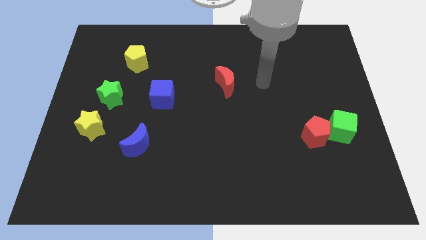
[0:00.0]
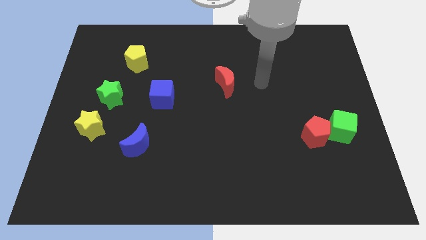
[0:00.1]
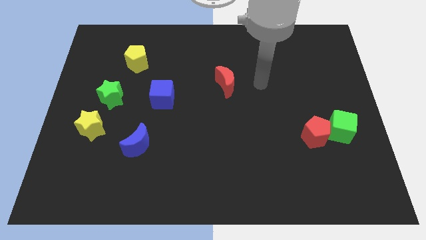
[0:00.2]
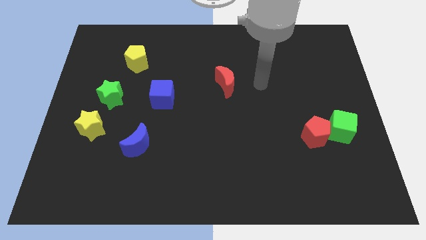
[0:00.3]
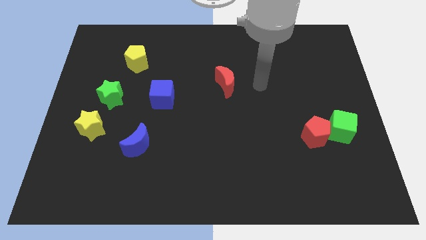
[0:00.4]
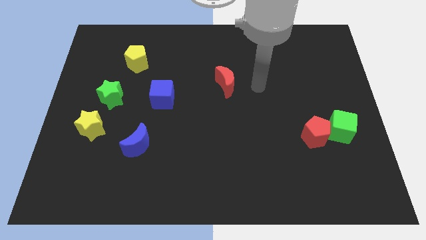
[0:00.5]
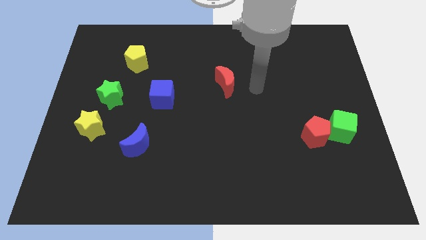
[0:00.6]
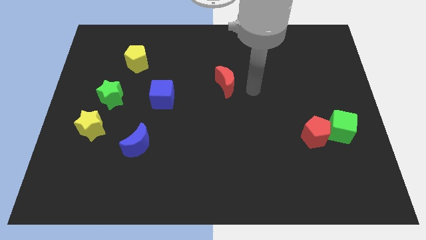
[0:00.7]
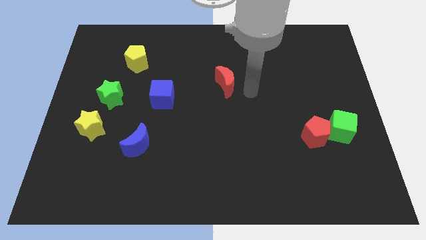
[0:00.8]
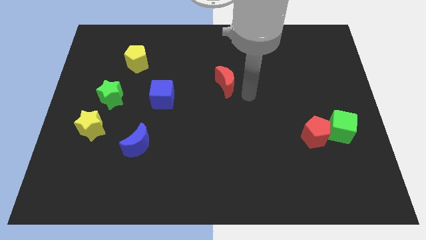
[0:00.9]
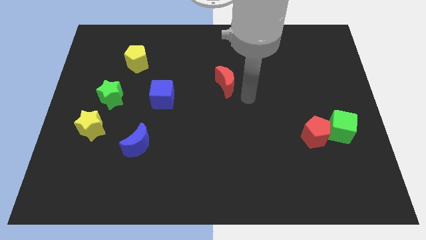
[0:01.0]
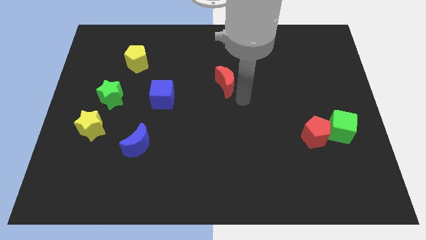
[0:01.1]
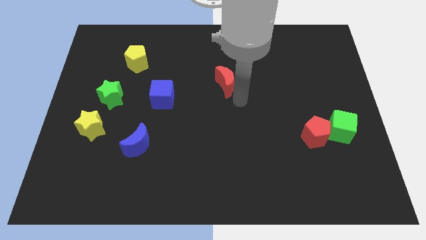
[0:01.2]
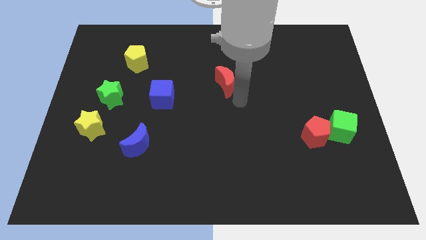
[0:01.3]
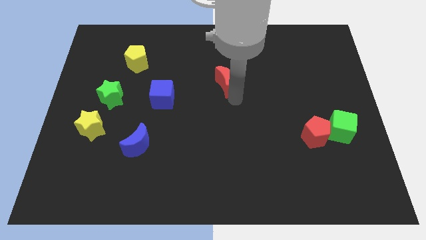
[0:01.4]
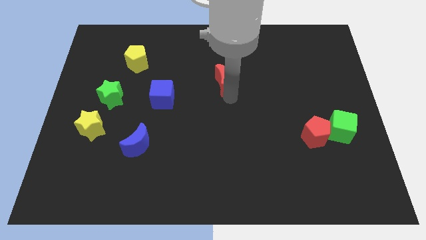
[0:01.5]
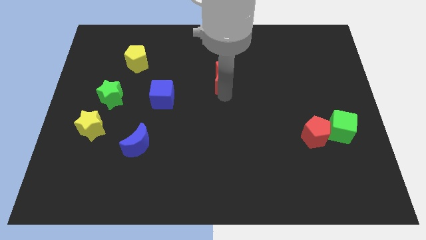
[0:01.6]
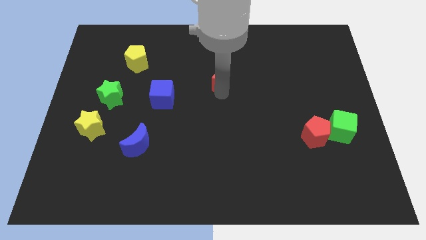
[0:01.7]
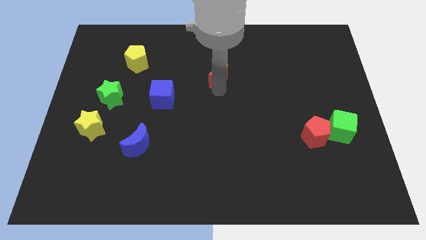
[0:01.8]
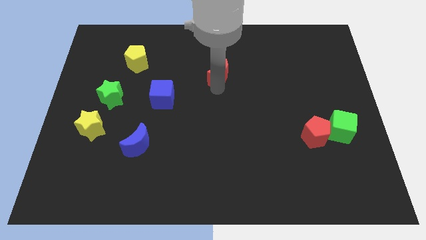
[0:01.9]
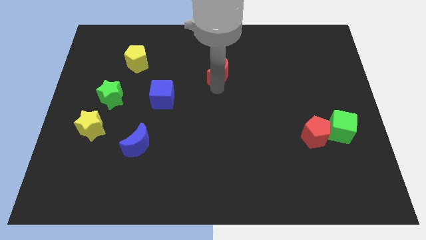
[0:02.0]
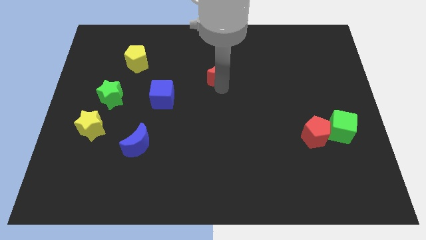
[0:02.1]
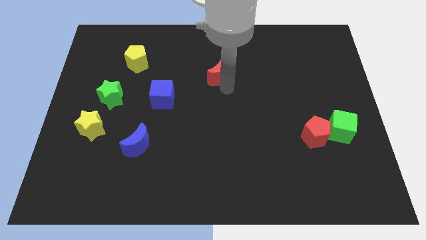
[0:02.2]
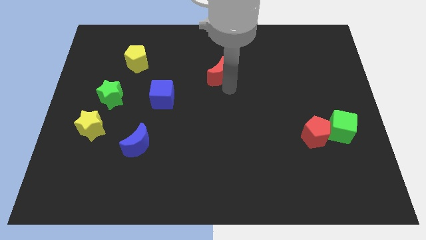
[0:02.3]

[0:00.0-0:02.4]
move the red crescent slightly upwards

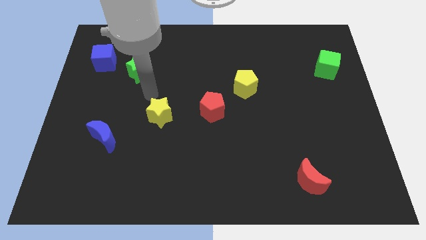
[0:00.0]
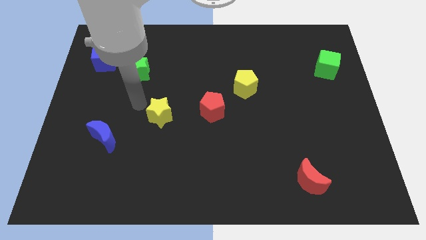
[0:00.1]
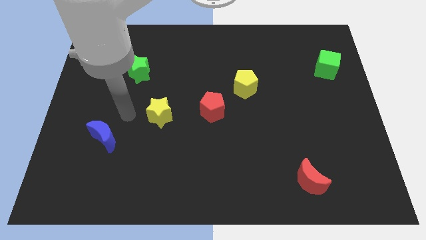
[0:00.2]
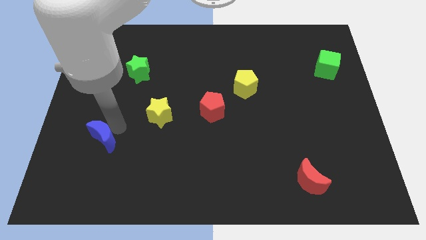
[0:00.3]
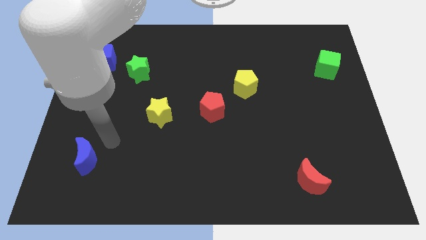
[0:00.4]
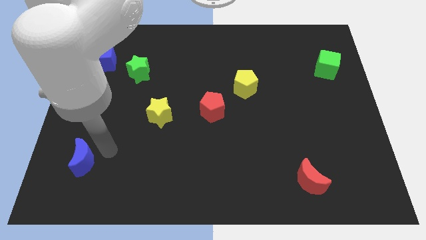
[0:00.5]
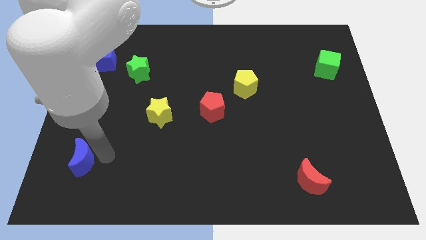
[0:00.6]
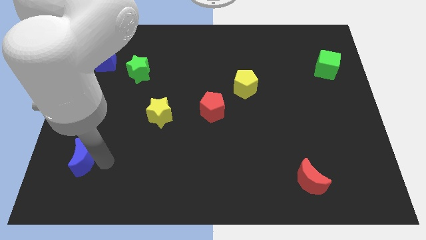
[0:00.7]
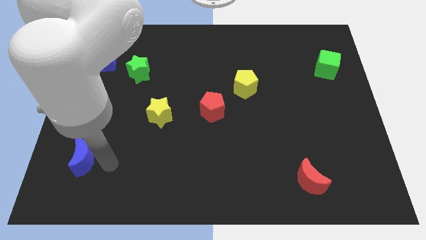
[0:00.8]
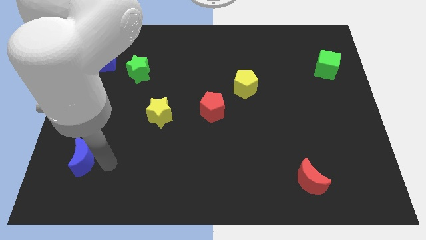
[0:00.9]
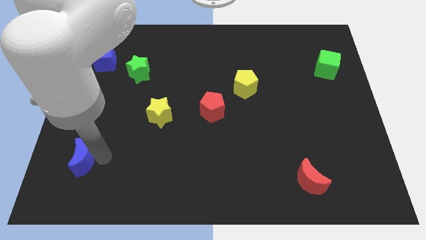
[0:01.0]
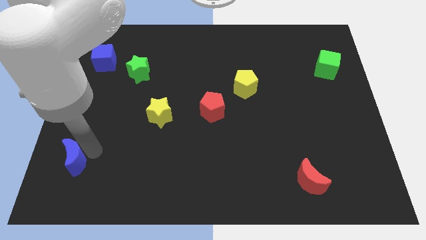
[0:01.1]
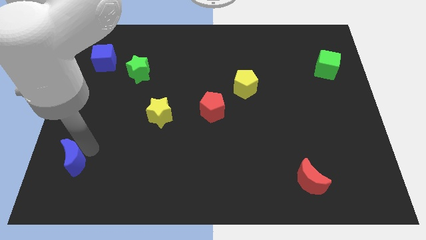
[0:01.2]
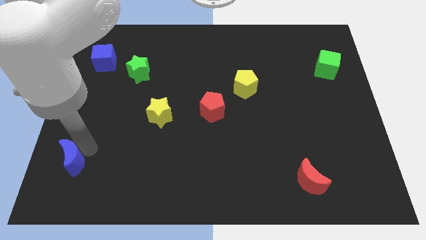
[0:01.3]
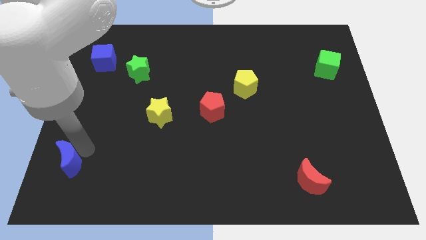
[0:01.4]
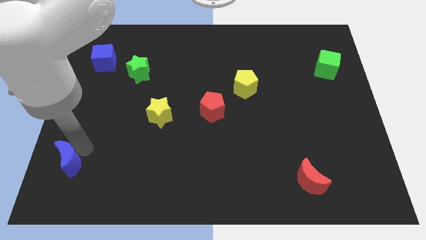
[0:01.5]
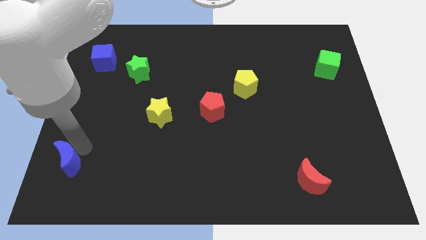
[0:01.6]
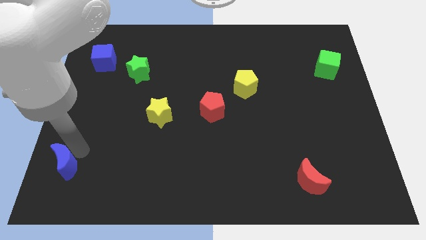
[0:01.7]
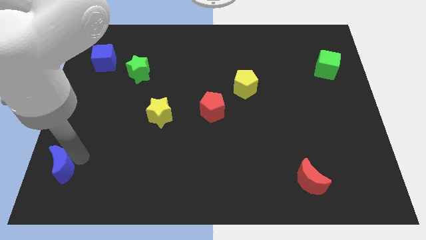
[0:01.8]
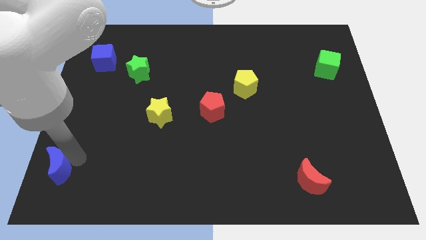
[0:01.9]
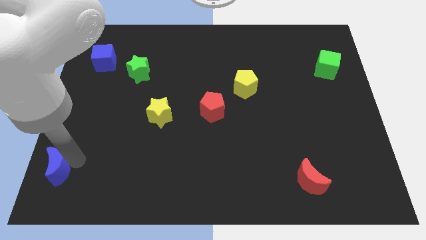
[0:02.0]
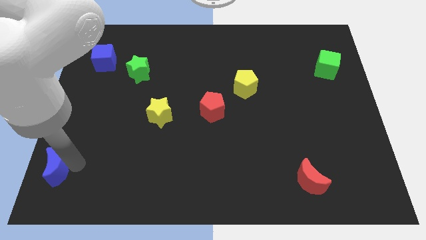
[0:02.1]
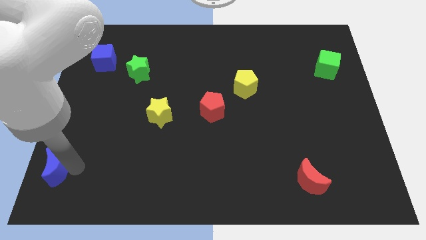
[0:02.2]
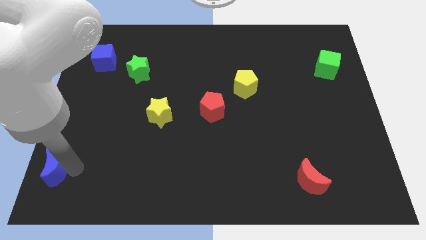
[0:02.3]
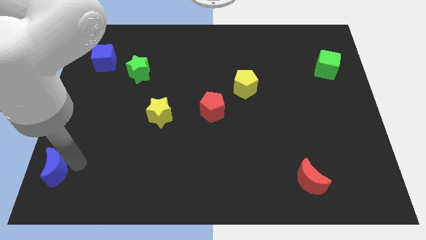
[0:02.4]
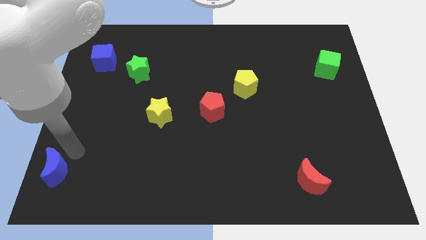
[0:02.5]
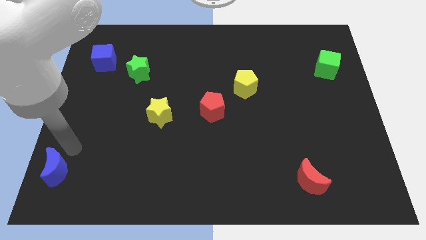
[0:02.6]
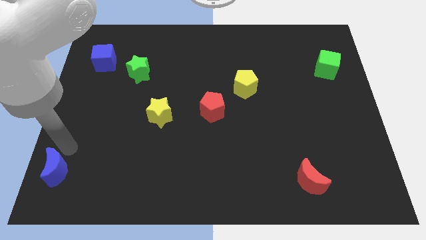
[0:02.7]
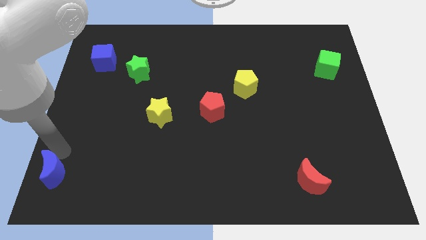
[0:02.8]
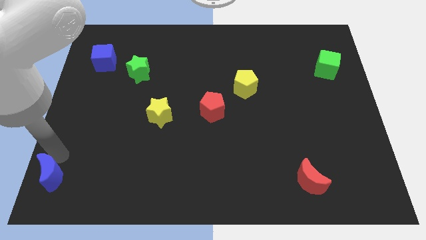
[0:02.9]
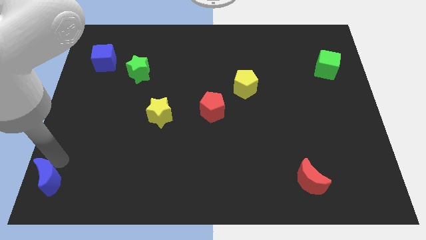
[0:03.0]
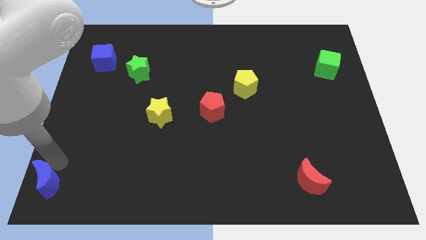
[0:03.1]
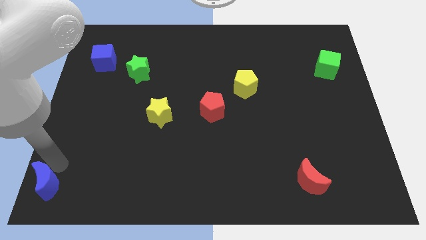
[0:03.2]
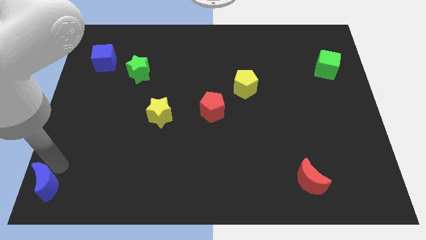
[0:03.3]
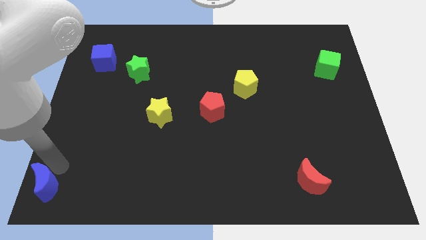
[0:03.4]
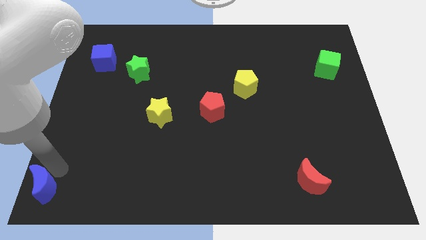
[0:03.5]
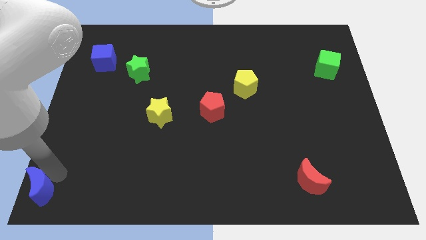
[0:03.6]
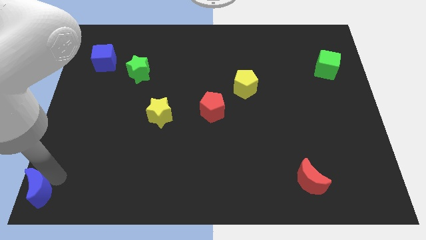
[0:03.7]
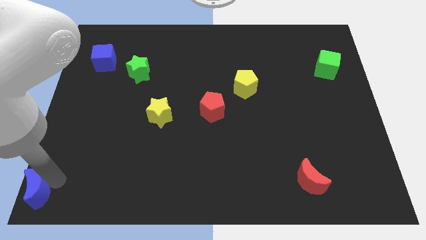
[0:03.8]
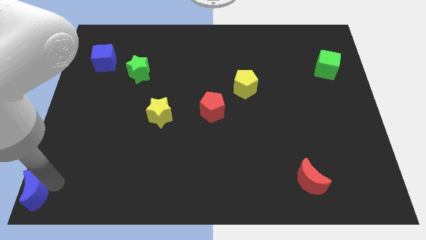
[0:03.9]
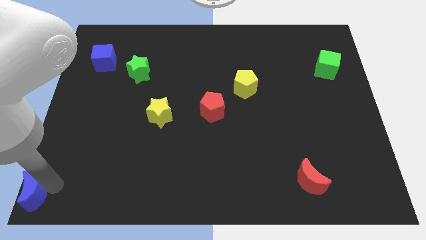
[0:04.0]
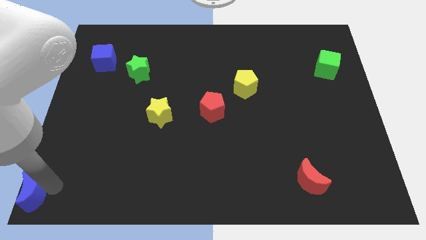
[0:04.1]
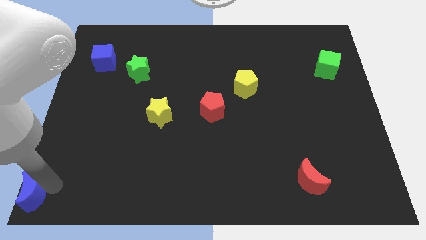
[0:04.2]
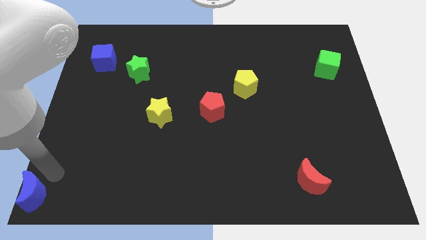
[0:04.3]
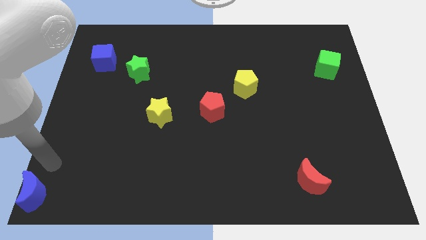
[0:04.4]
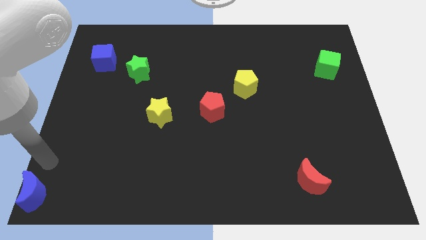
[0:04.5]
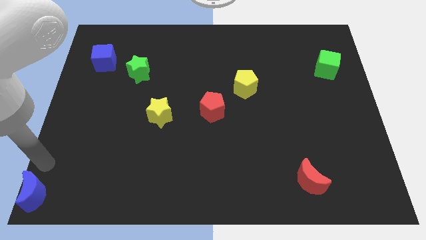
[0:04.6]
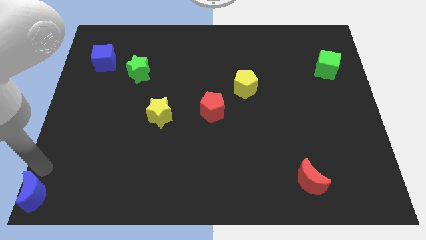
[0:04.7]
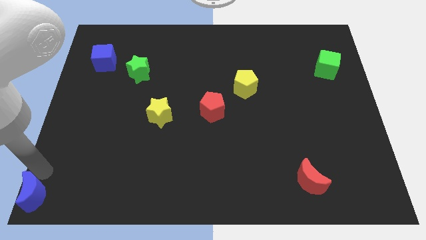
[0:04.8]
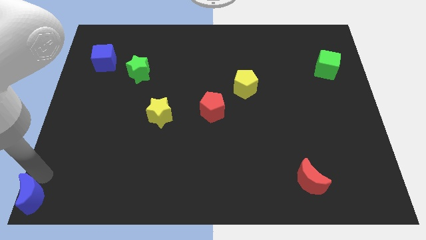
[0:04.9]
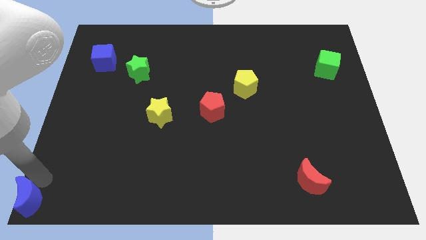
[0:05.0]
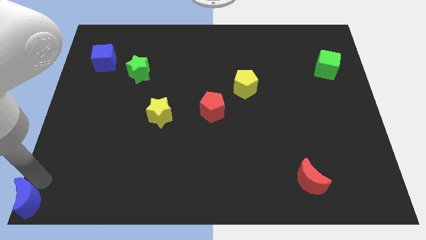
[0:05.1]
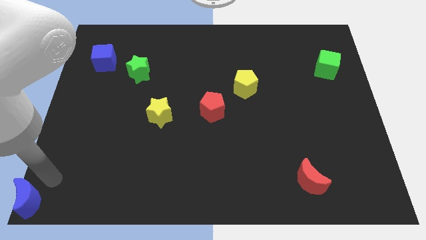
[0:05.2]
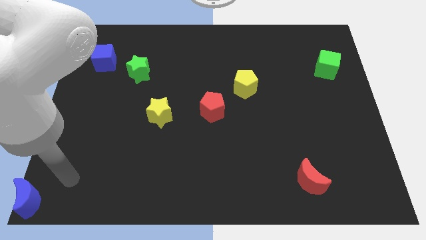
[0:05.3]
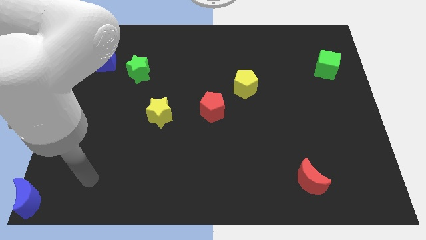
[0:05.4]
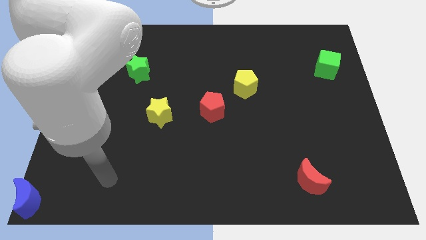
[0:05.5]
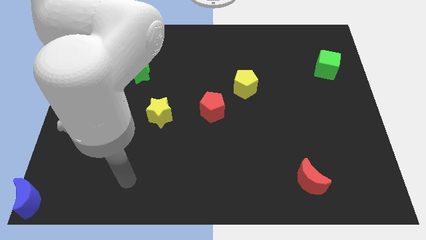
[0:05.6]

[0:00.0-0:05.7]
place the blue moon at the bottom left corner of the board

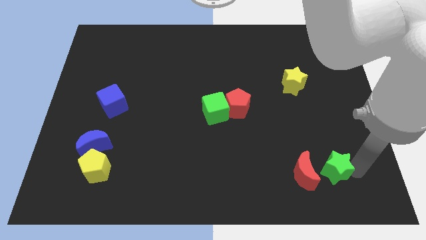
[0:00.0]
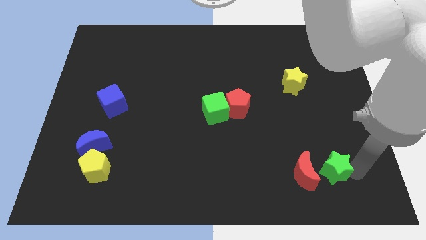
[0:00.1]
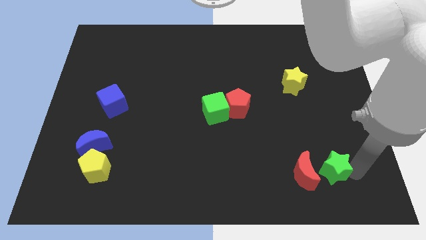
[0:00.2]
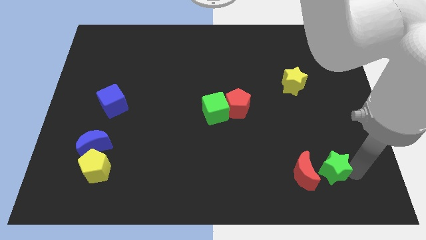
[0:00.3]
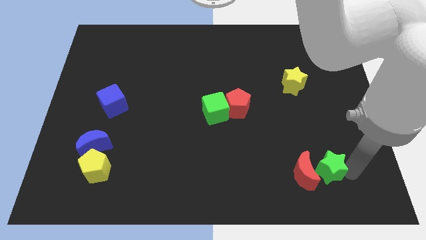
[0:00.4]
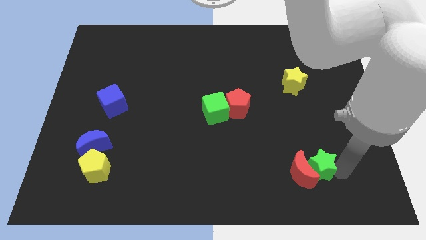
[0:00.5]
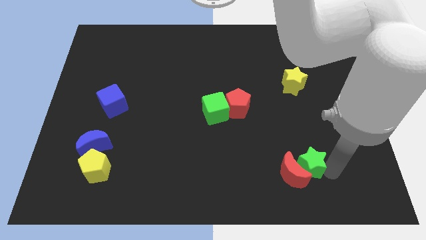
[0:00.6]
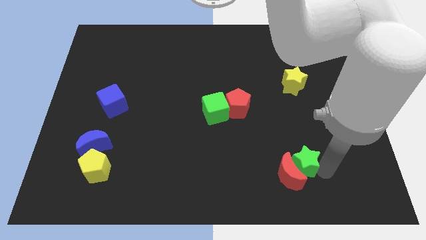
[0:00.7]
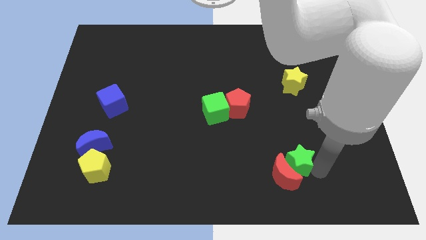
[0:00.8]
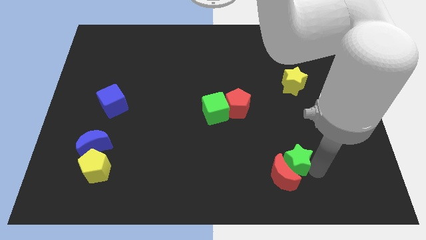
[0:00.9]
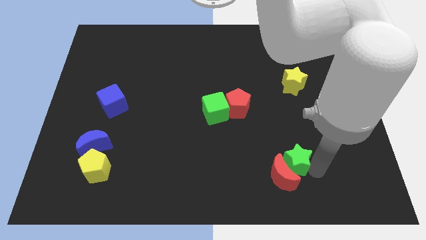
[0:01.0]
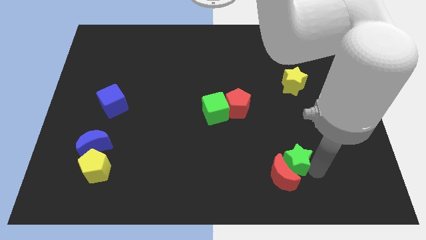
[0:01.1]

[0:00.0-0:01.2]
push the green star into the red moon
